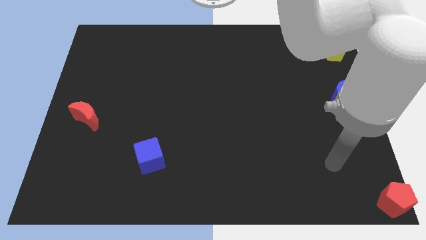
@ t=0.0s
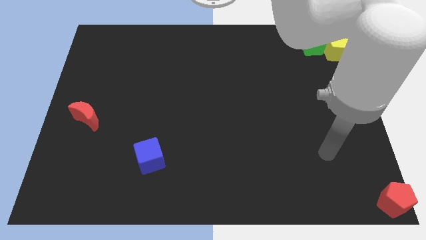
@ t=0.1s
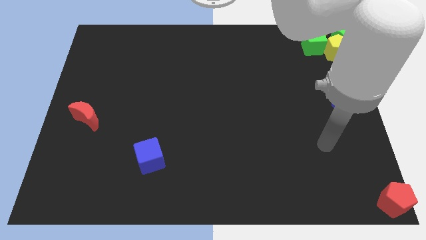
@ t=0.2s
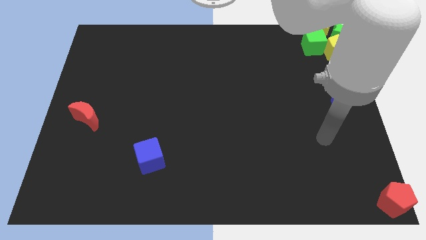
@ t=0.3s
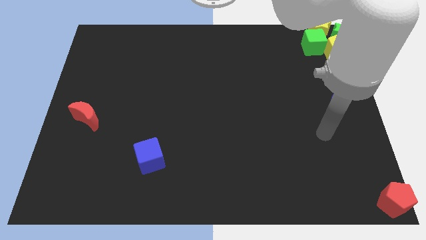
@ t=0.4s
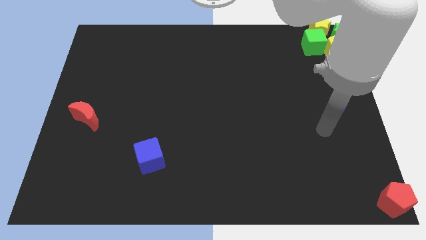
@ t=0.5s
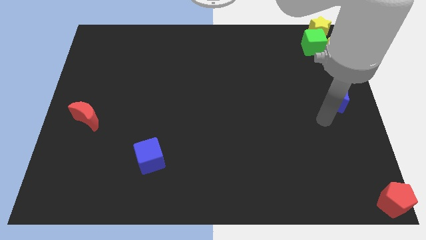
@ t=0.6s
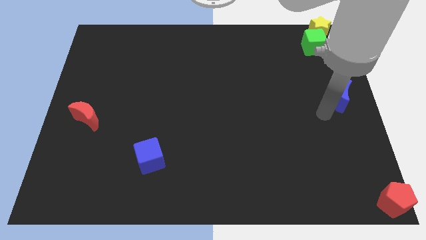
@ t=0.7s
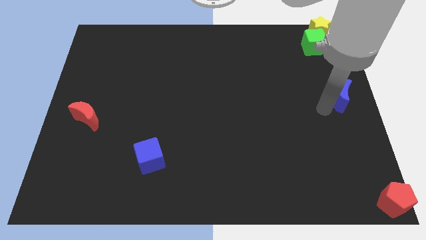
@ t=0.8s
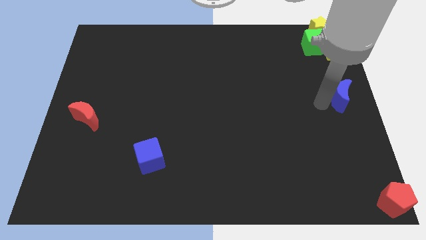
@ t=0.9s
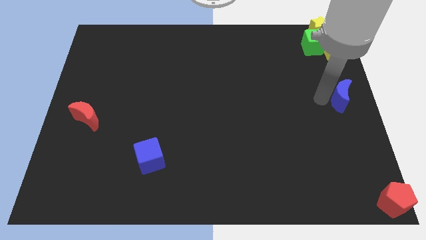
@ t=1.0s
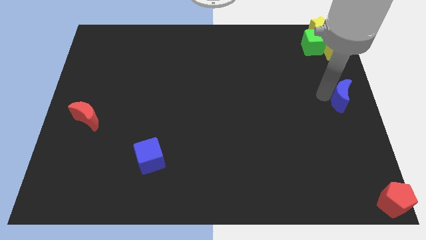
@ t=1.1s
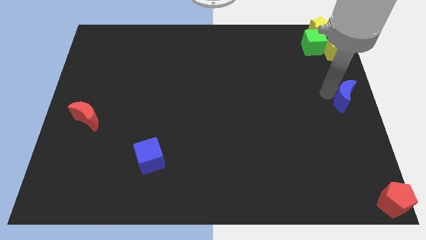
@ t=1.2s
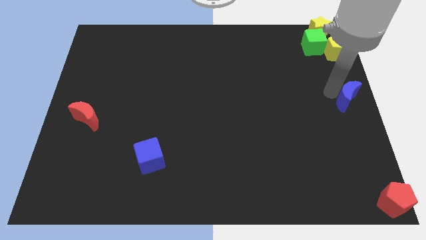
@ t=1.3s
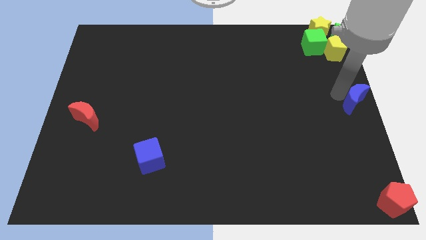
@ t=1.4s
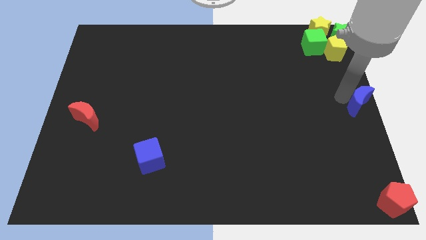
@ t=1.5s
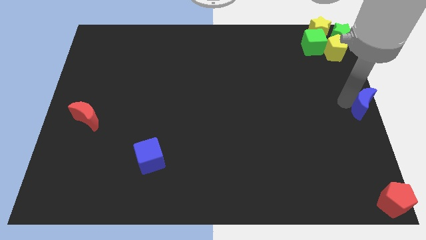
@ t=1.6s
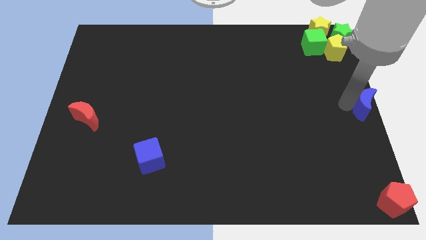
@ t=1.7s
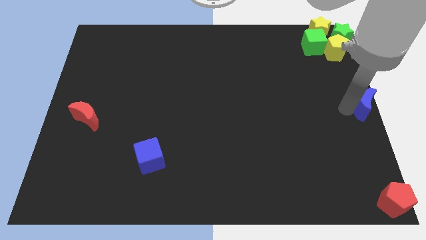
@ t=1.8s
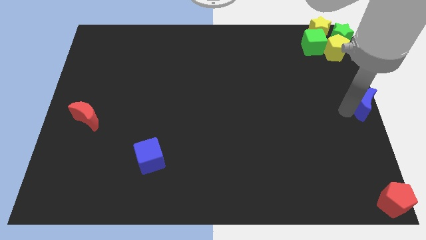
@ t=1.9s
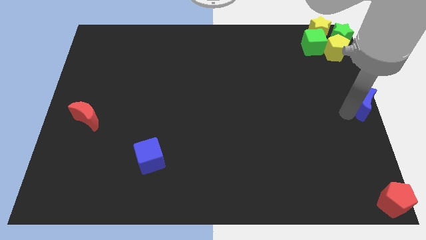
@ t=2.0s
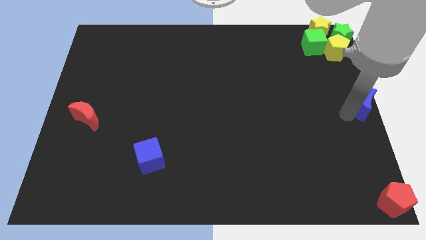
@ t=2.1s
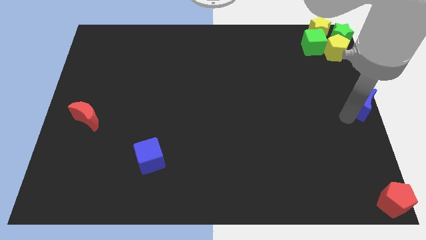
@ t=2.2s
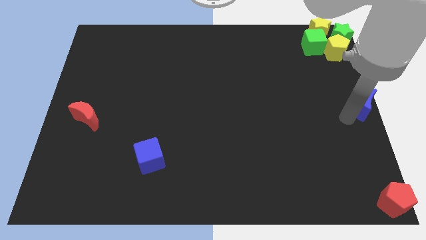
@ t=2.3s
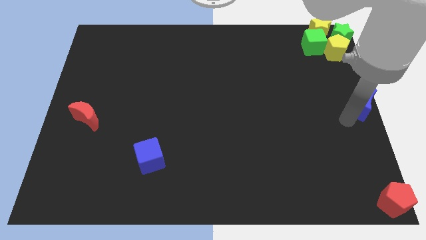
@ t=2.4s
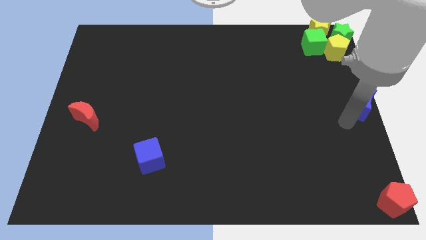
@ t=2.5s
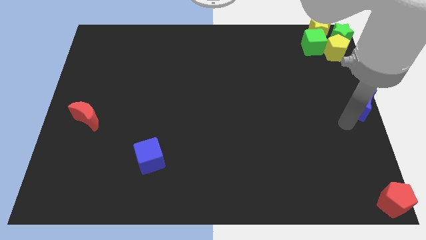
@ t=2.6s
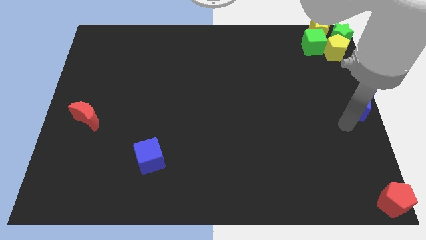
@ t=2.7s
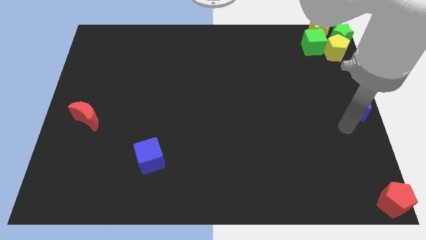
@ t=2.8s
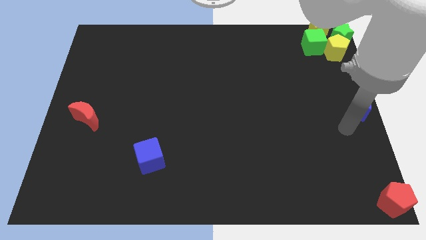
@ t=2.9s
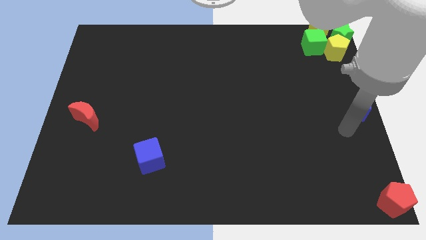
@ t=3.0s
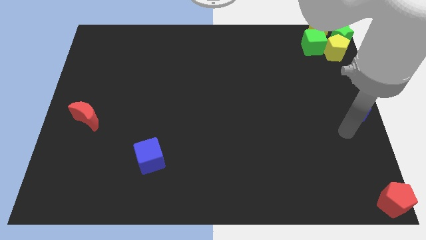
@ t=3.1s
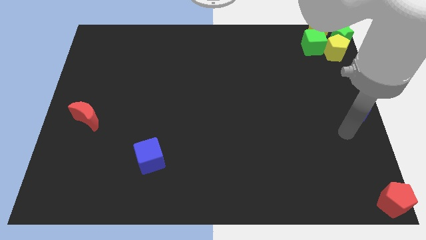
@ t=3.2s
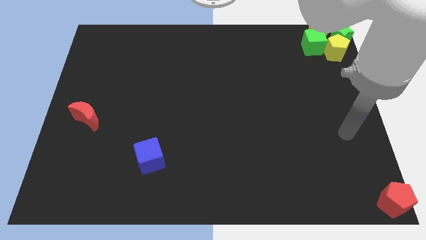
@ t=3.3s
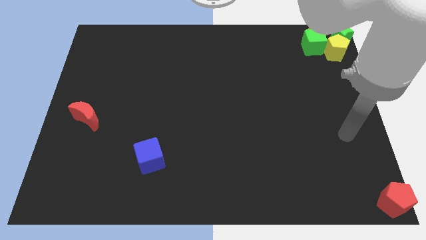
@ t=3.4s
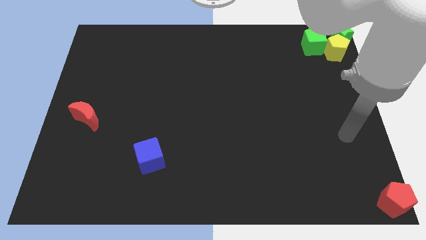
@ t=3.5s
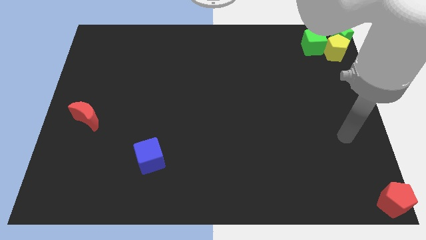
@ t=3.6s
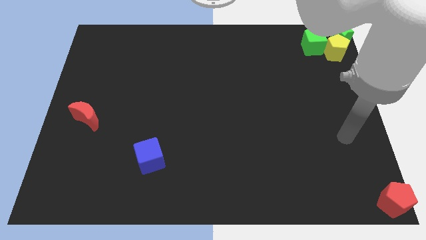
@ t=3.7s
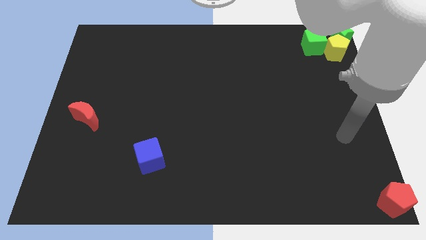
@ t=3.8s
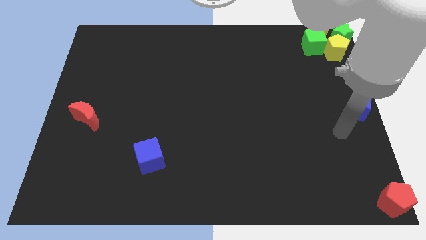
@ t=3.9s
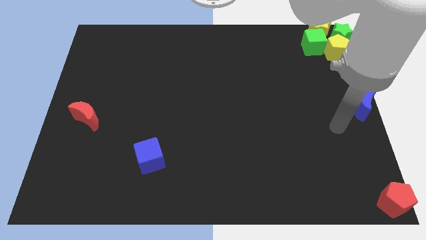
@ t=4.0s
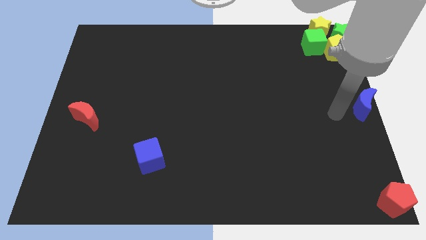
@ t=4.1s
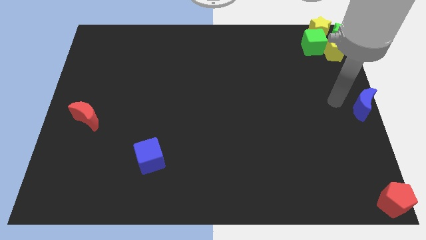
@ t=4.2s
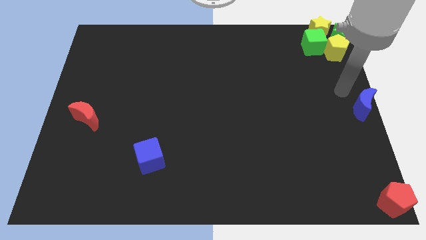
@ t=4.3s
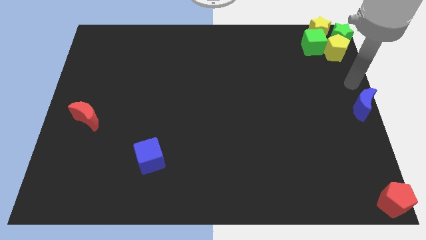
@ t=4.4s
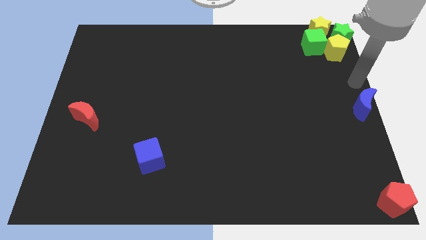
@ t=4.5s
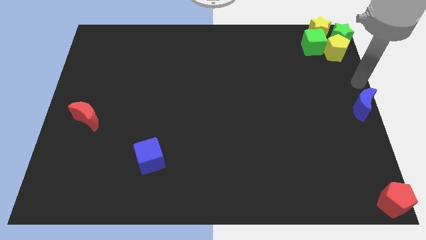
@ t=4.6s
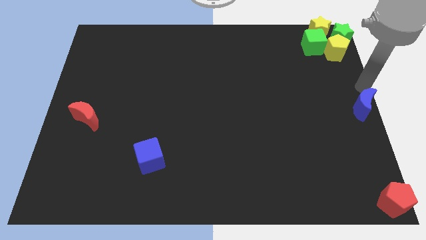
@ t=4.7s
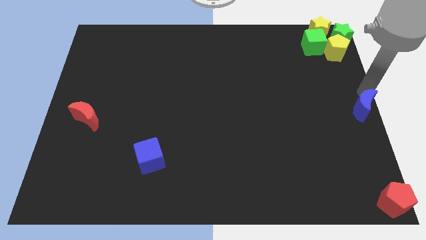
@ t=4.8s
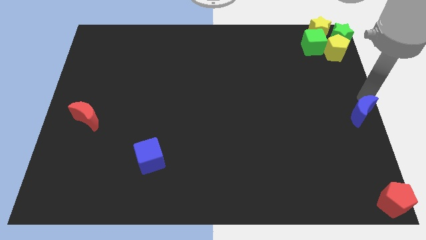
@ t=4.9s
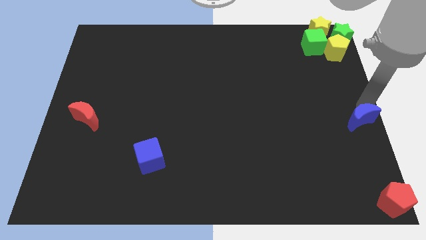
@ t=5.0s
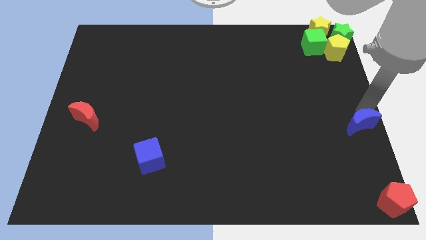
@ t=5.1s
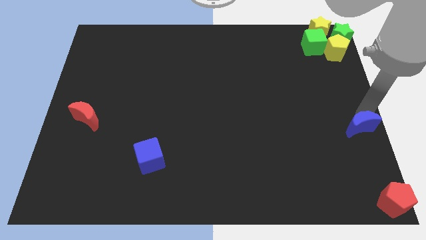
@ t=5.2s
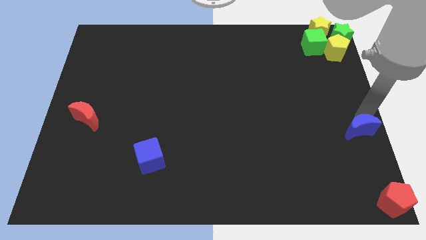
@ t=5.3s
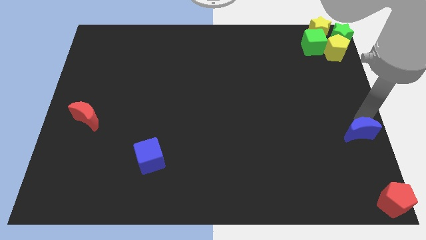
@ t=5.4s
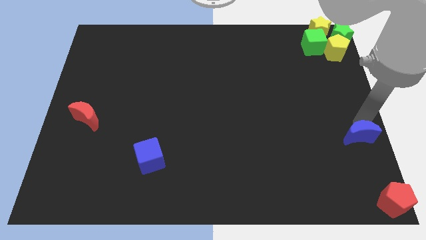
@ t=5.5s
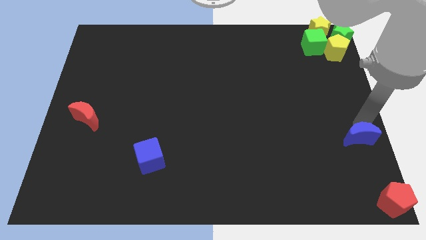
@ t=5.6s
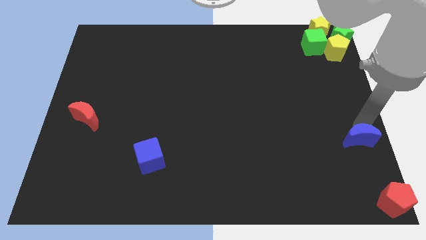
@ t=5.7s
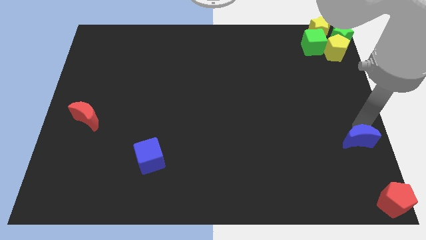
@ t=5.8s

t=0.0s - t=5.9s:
push the blue crescent to the bottom right corner of the board

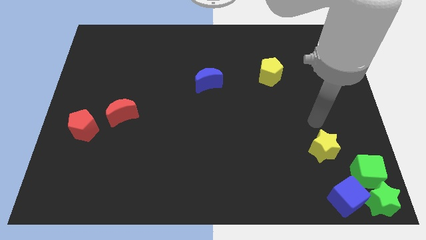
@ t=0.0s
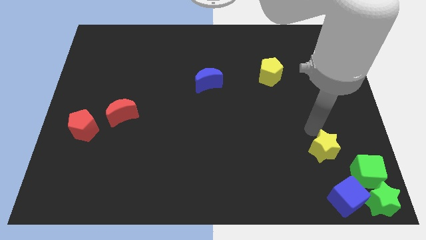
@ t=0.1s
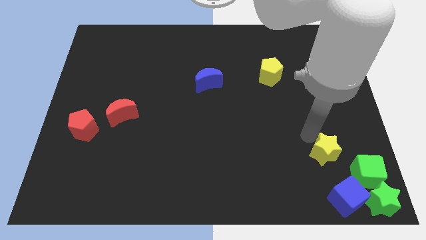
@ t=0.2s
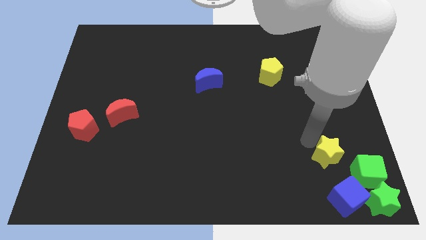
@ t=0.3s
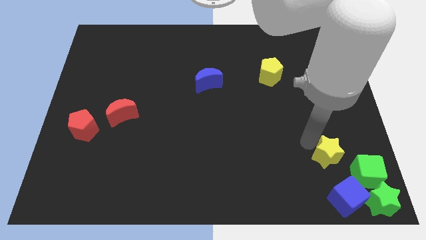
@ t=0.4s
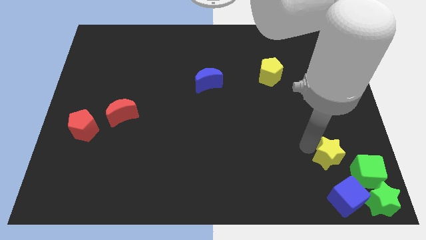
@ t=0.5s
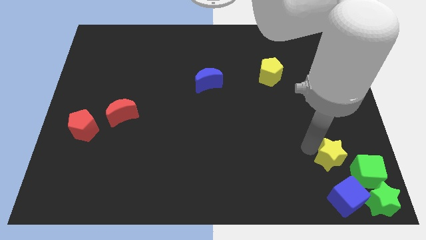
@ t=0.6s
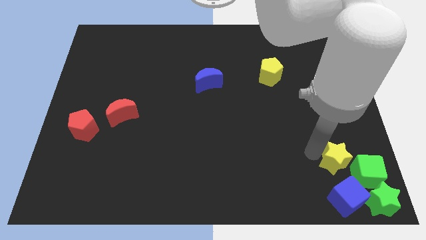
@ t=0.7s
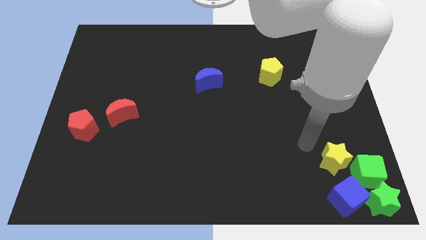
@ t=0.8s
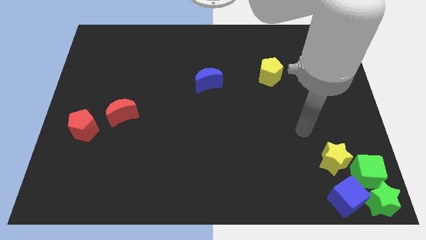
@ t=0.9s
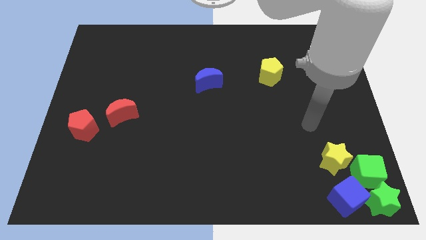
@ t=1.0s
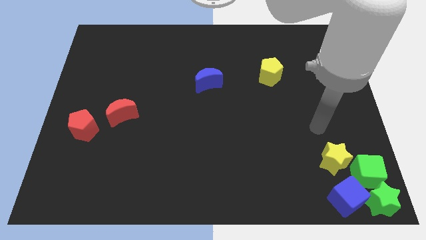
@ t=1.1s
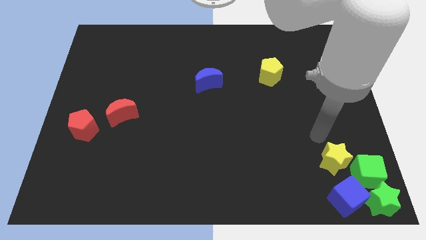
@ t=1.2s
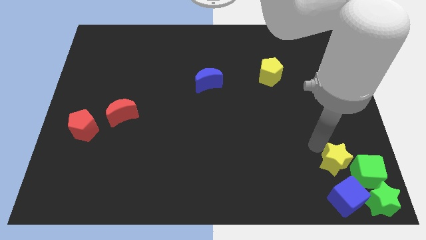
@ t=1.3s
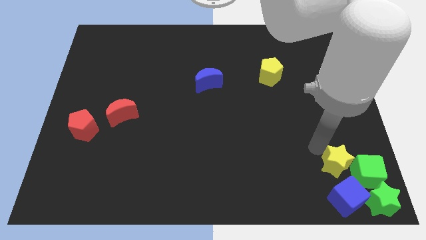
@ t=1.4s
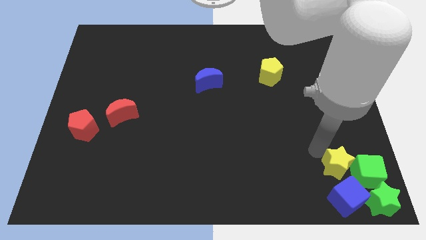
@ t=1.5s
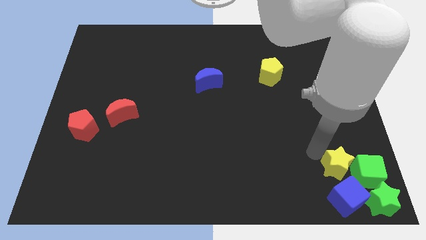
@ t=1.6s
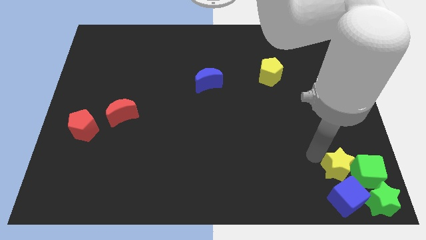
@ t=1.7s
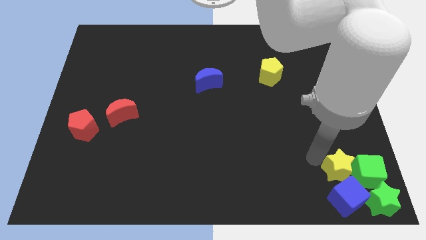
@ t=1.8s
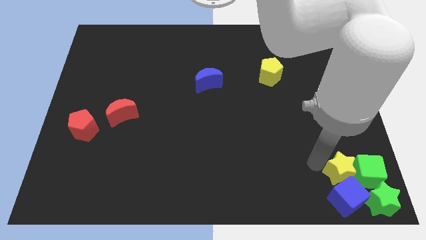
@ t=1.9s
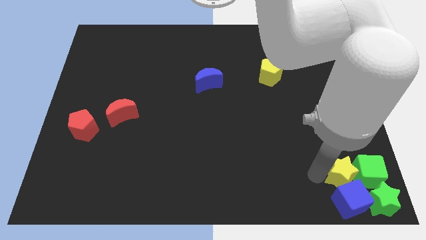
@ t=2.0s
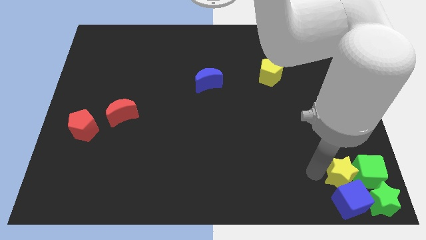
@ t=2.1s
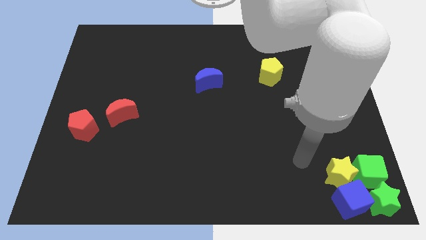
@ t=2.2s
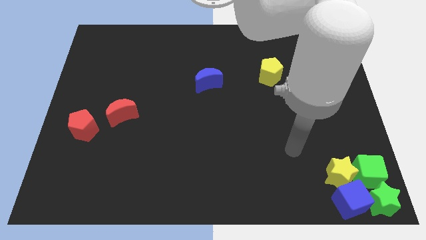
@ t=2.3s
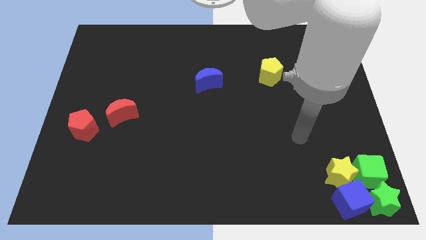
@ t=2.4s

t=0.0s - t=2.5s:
push the yellow star into the blue cube

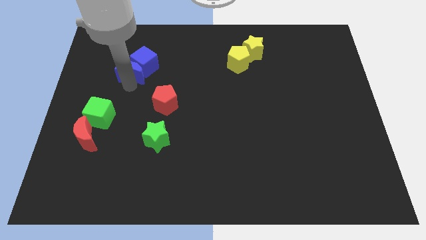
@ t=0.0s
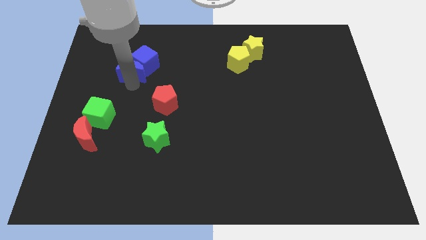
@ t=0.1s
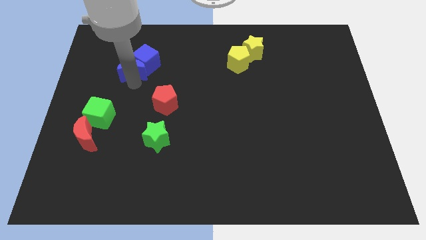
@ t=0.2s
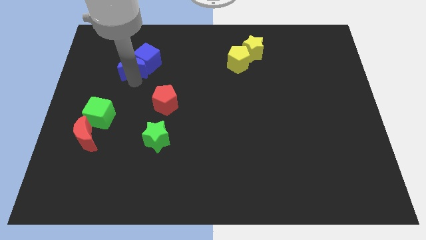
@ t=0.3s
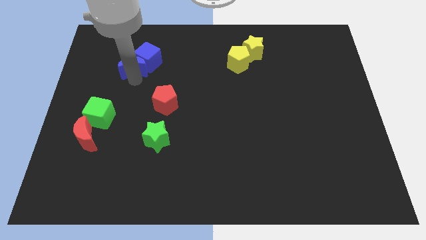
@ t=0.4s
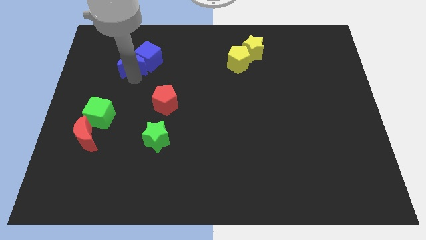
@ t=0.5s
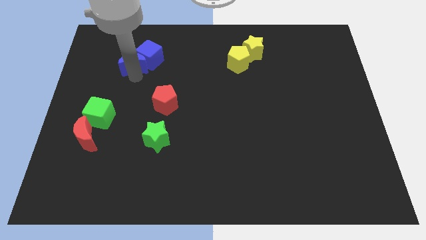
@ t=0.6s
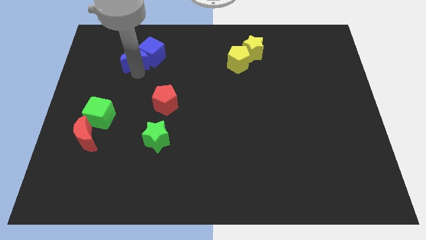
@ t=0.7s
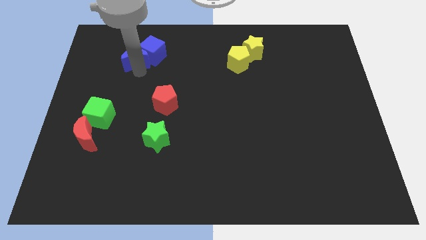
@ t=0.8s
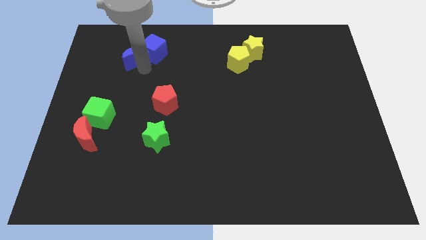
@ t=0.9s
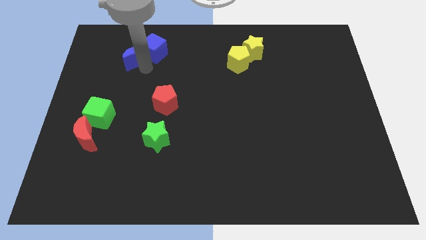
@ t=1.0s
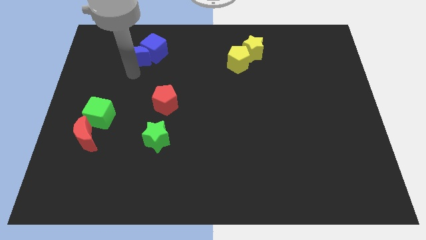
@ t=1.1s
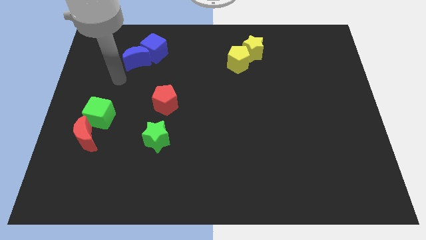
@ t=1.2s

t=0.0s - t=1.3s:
place the blue blocks parallel to the yellow blocks
